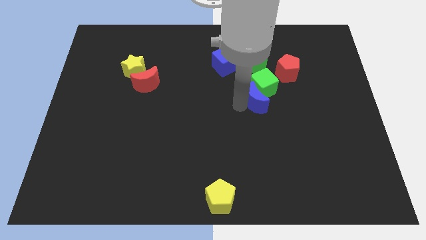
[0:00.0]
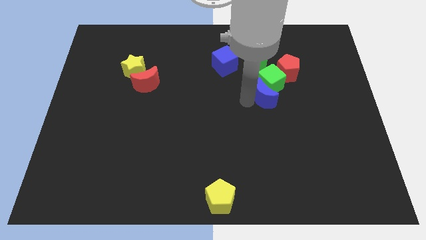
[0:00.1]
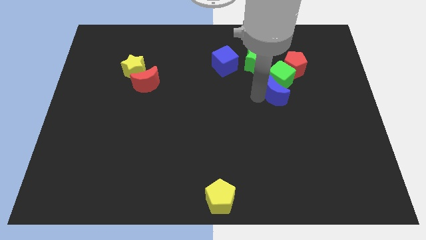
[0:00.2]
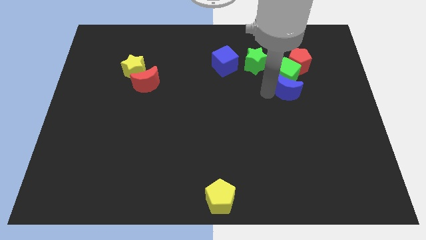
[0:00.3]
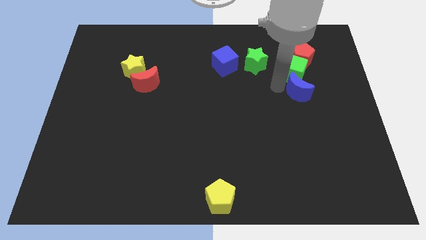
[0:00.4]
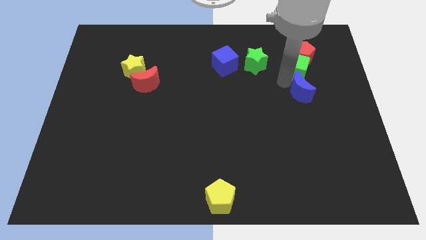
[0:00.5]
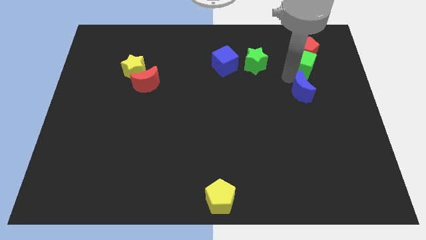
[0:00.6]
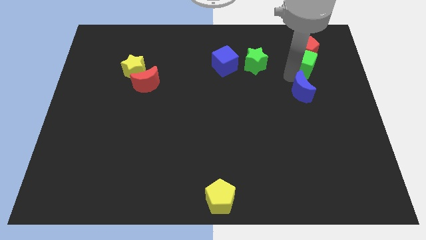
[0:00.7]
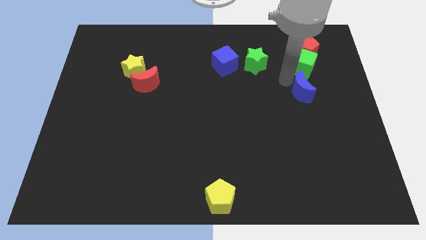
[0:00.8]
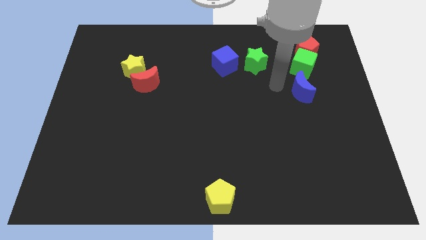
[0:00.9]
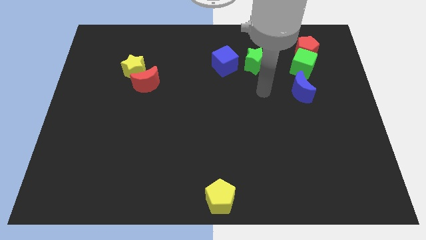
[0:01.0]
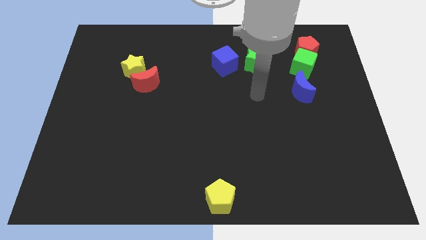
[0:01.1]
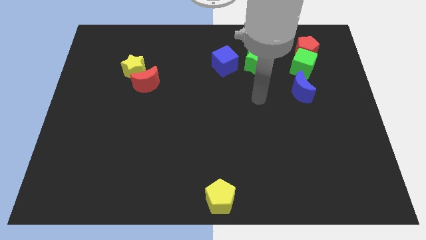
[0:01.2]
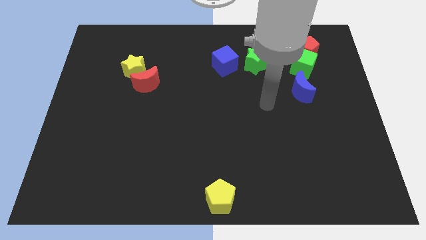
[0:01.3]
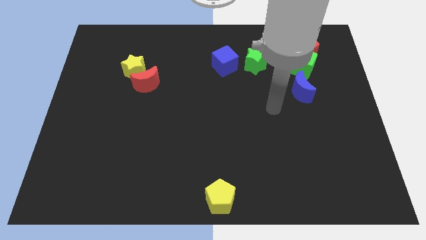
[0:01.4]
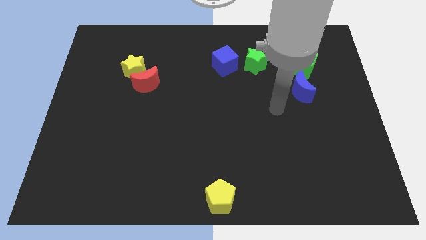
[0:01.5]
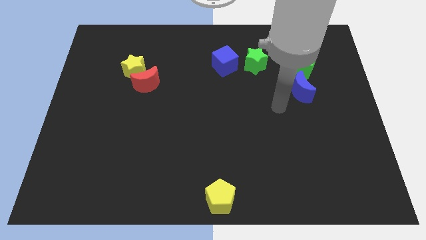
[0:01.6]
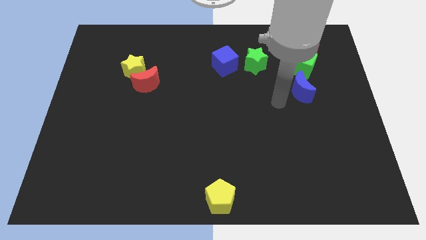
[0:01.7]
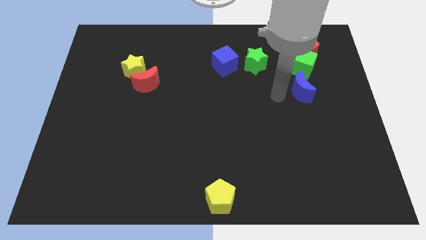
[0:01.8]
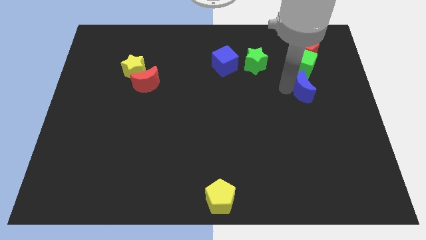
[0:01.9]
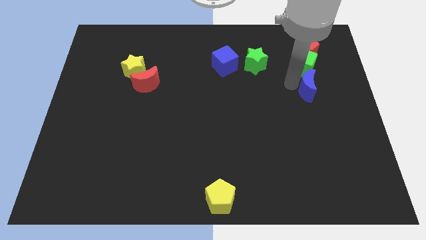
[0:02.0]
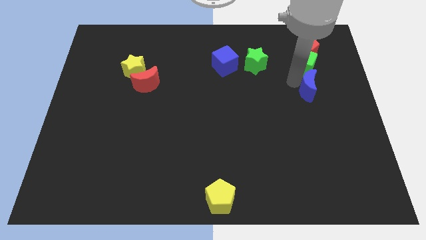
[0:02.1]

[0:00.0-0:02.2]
push green cube and blue moon towards the top right of the board

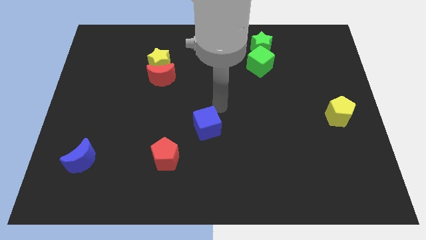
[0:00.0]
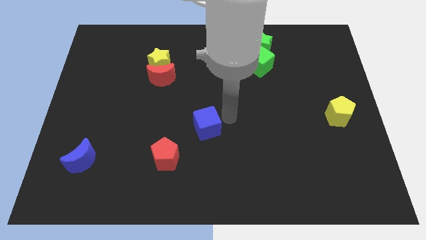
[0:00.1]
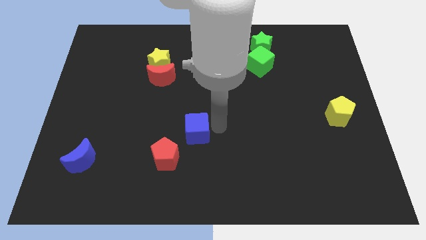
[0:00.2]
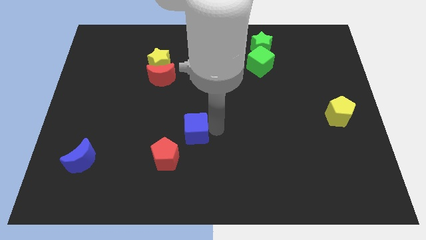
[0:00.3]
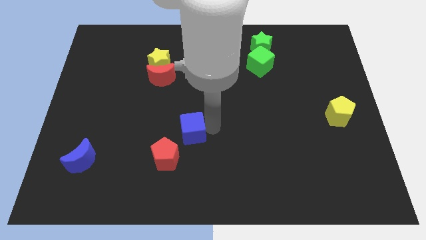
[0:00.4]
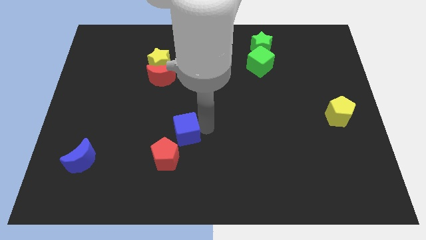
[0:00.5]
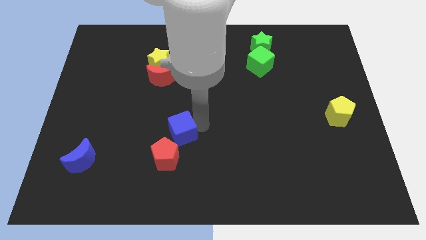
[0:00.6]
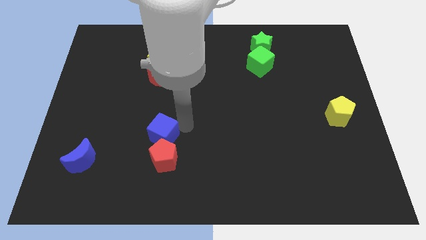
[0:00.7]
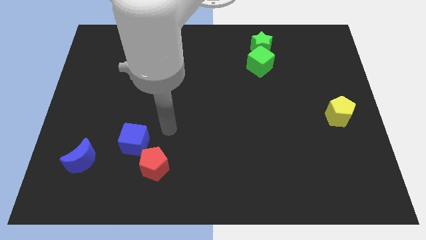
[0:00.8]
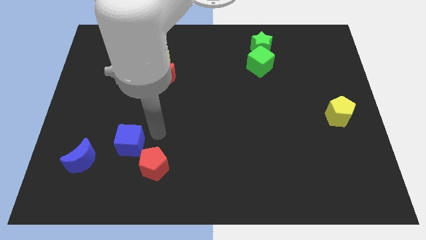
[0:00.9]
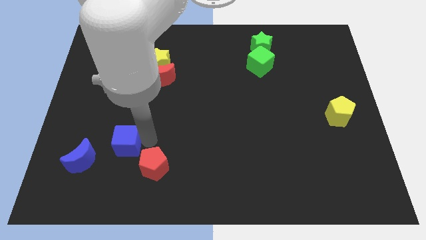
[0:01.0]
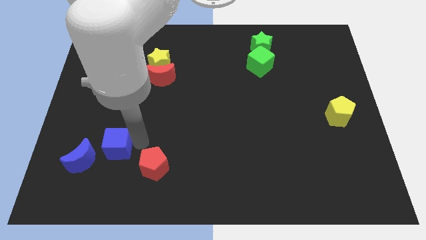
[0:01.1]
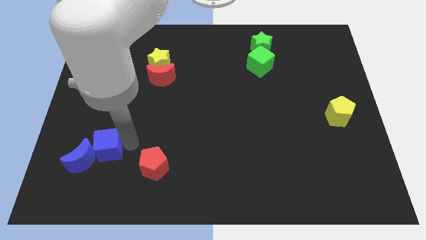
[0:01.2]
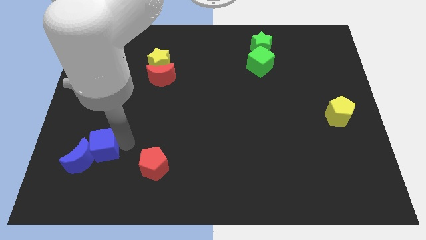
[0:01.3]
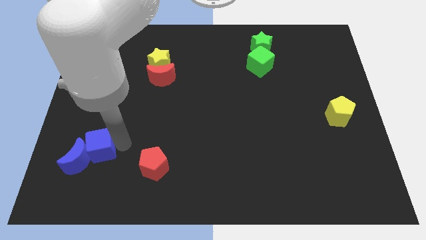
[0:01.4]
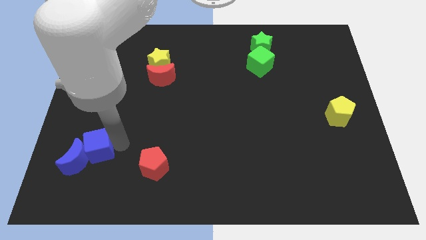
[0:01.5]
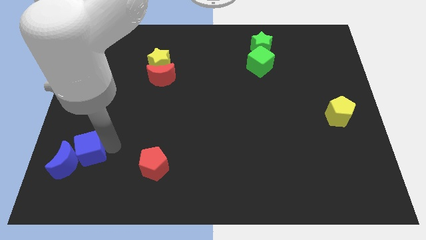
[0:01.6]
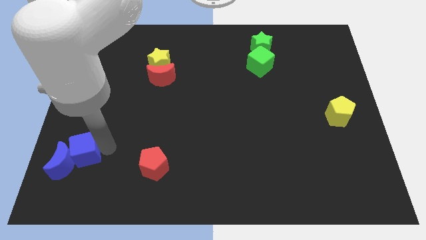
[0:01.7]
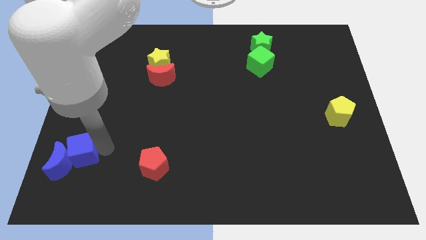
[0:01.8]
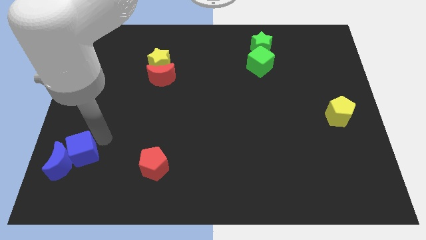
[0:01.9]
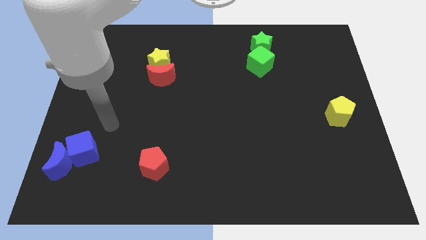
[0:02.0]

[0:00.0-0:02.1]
push blue cube into blue moon

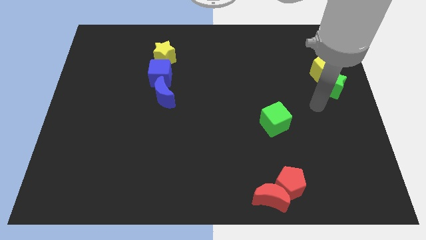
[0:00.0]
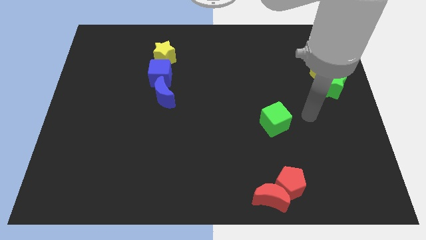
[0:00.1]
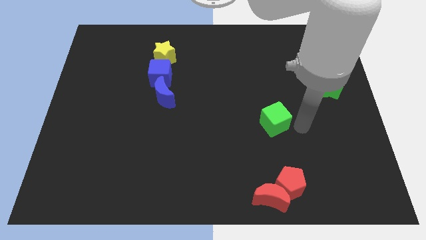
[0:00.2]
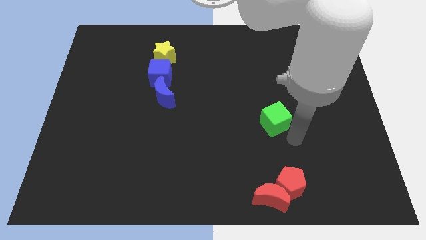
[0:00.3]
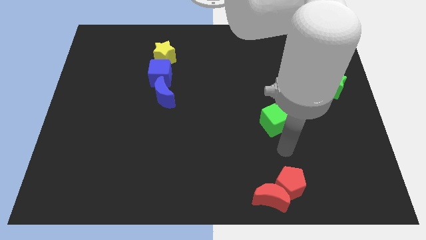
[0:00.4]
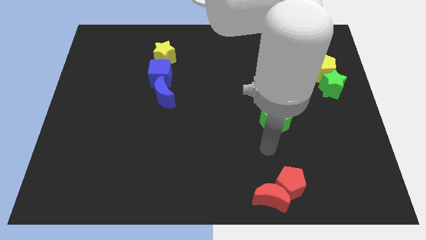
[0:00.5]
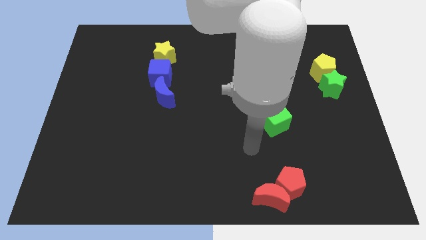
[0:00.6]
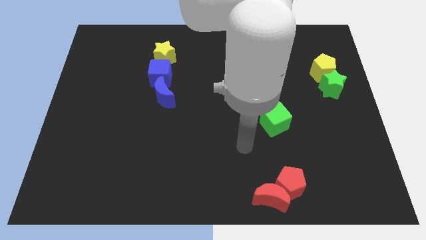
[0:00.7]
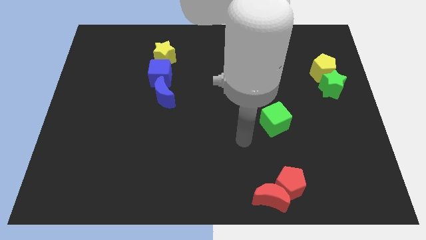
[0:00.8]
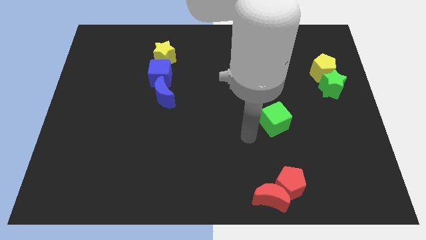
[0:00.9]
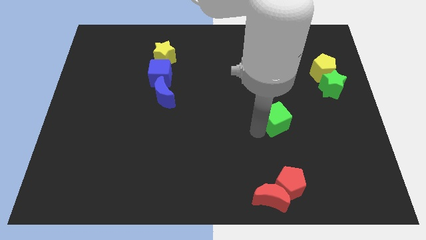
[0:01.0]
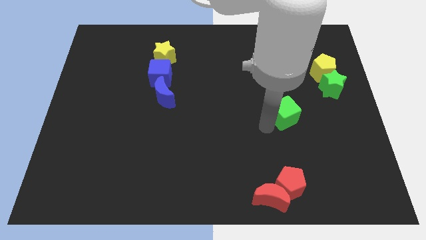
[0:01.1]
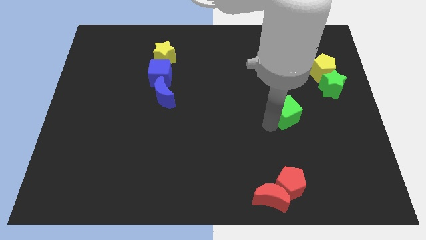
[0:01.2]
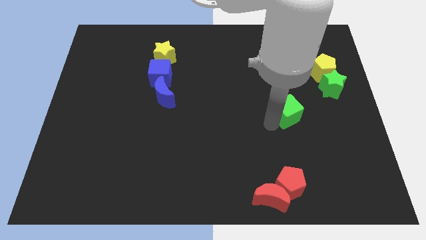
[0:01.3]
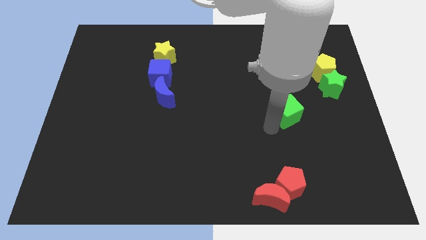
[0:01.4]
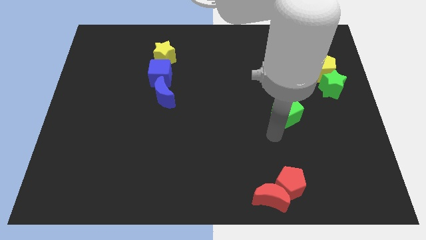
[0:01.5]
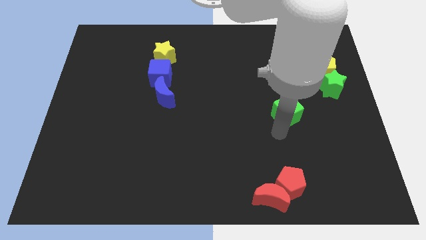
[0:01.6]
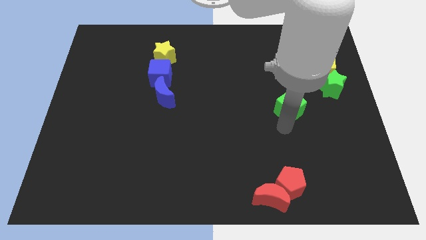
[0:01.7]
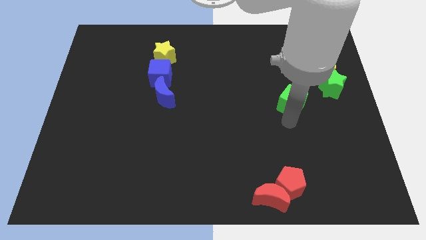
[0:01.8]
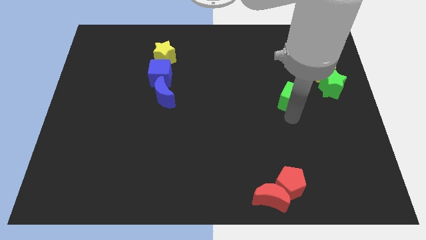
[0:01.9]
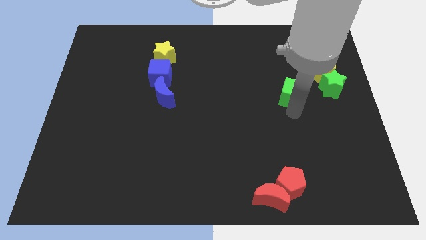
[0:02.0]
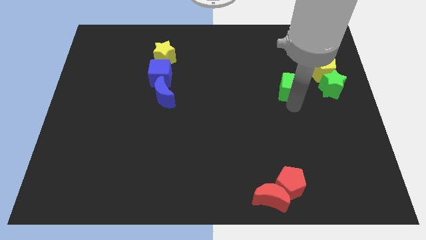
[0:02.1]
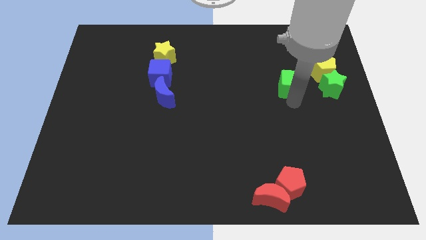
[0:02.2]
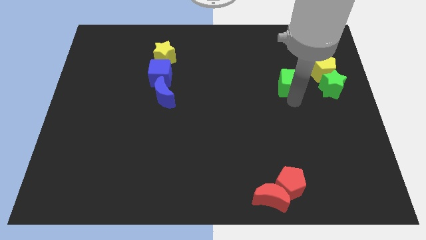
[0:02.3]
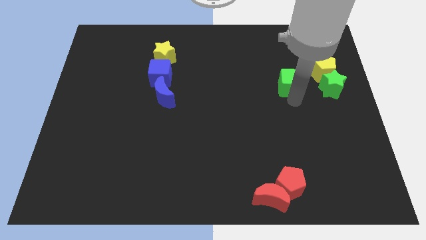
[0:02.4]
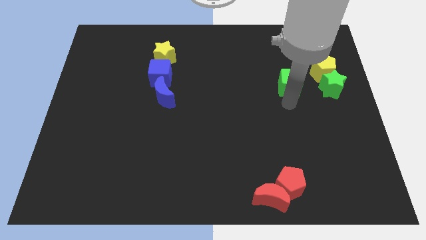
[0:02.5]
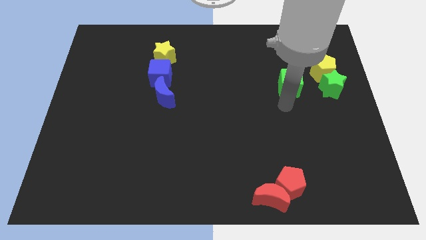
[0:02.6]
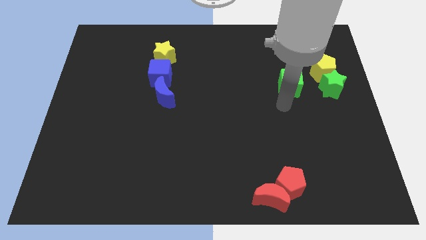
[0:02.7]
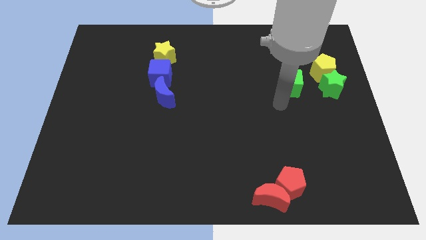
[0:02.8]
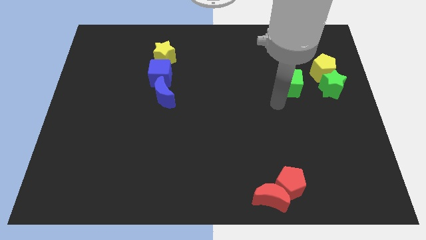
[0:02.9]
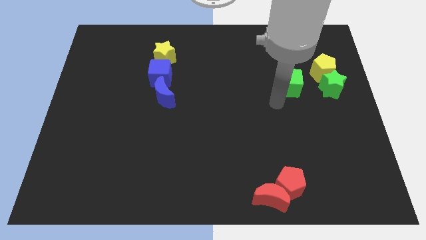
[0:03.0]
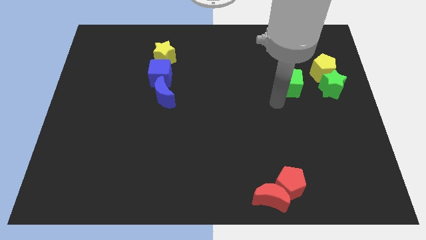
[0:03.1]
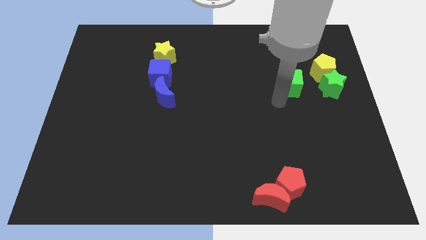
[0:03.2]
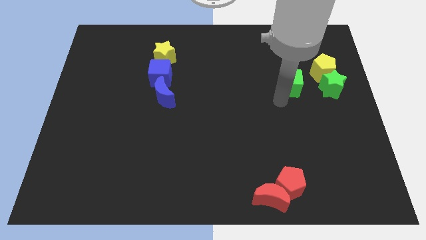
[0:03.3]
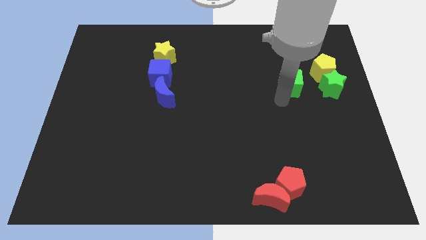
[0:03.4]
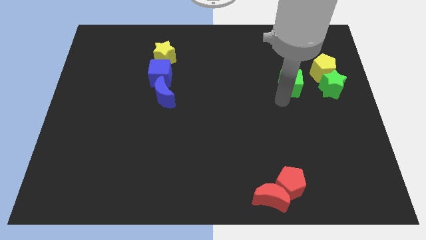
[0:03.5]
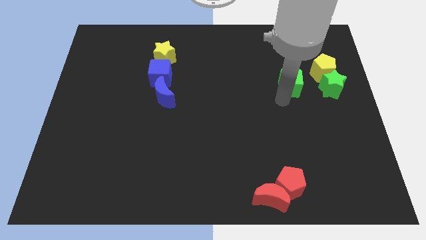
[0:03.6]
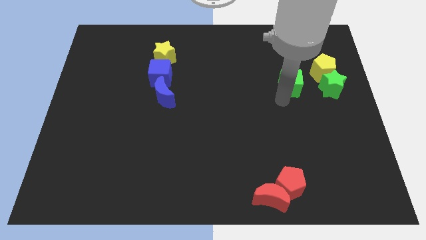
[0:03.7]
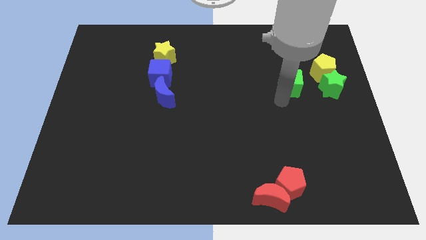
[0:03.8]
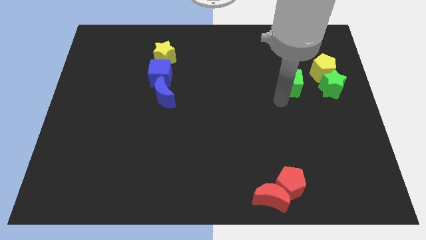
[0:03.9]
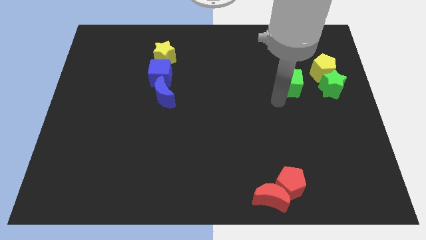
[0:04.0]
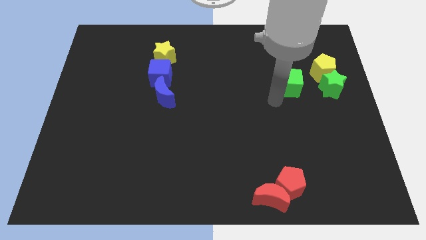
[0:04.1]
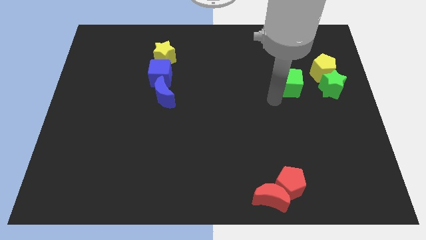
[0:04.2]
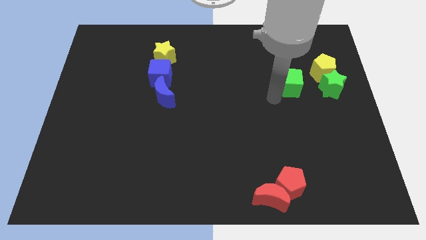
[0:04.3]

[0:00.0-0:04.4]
push green cube towards the top of the board

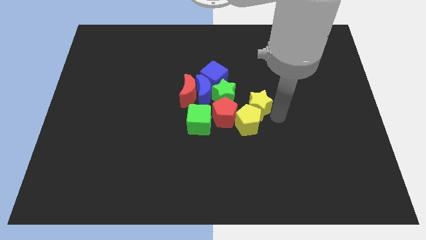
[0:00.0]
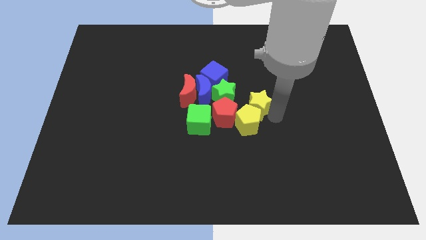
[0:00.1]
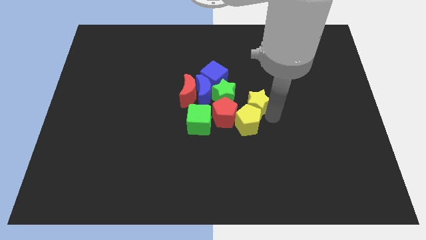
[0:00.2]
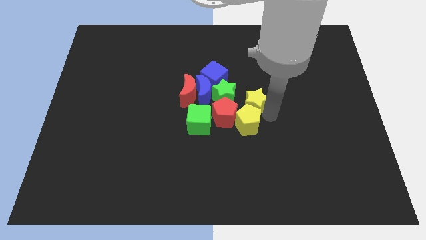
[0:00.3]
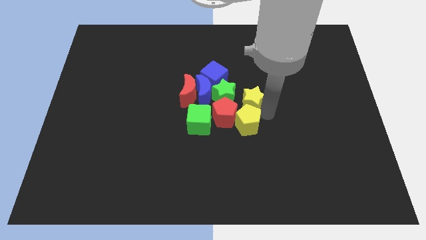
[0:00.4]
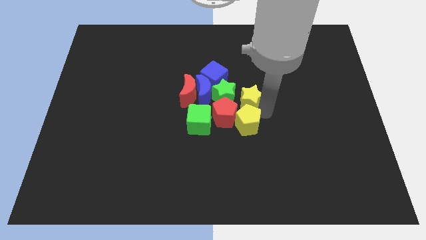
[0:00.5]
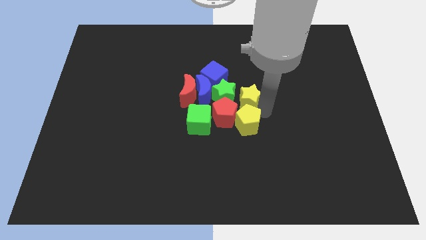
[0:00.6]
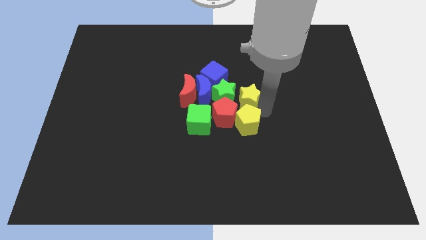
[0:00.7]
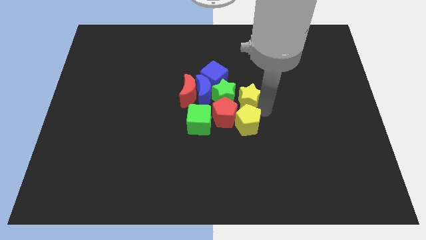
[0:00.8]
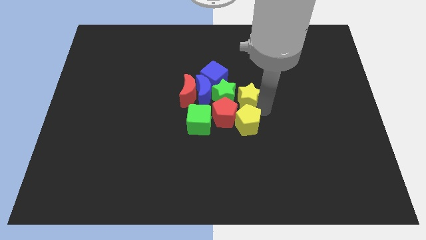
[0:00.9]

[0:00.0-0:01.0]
move the yellow star on top of the yellow pentagon
